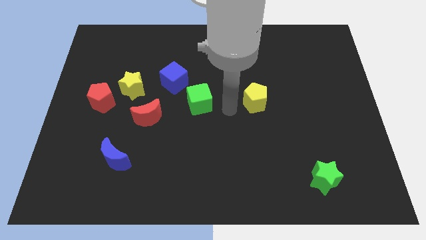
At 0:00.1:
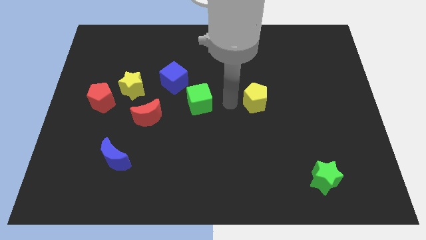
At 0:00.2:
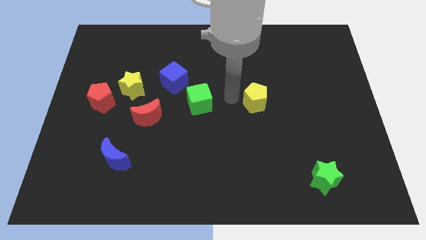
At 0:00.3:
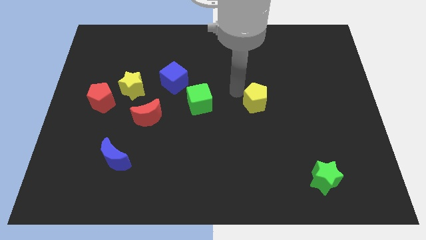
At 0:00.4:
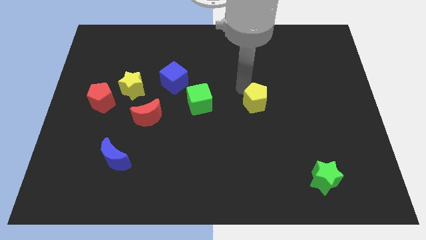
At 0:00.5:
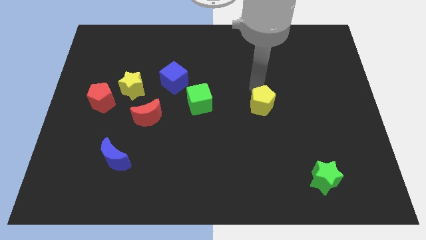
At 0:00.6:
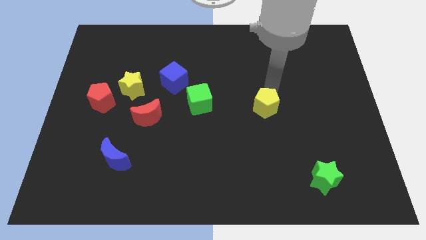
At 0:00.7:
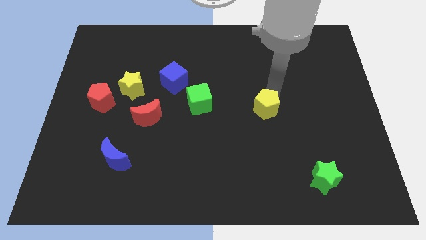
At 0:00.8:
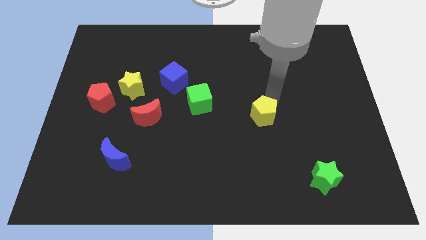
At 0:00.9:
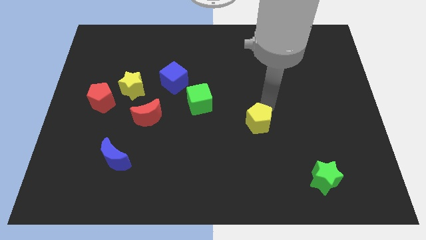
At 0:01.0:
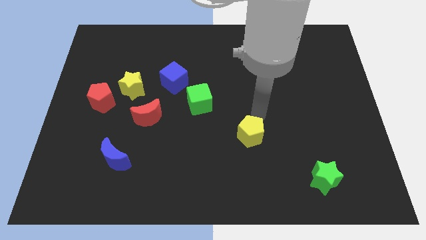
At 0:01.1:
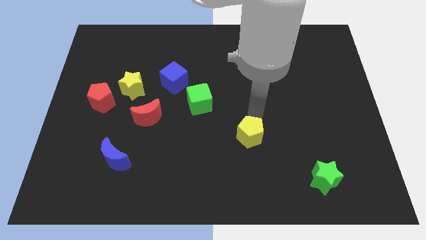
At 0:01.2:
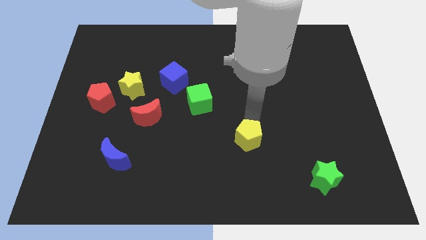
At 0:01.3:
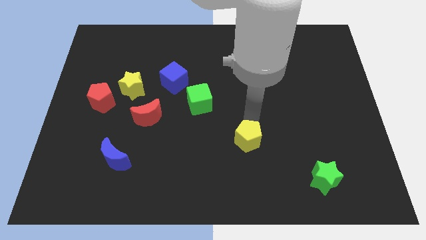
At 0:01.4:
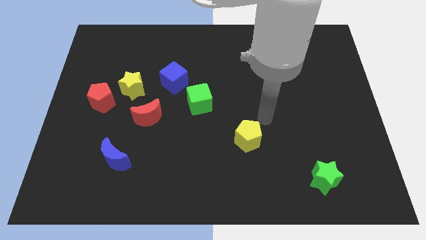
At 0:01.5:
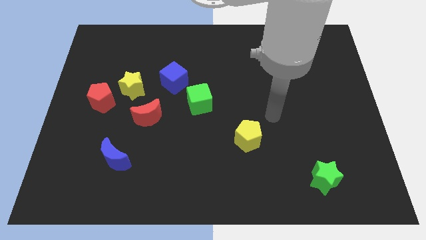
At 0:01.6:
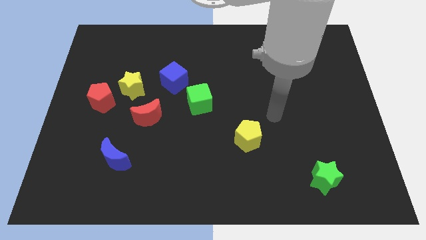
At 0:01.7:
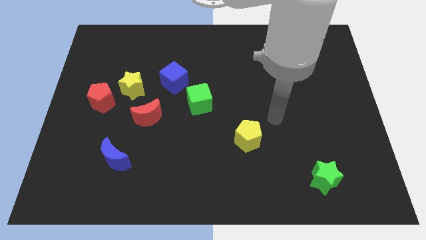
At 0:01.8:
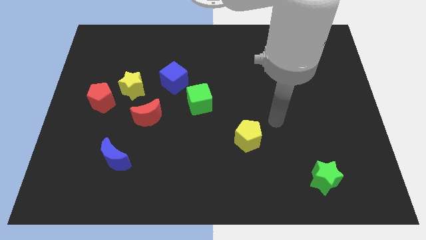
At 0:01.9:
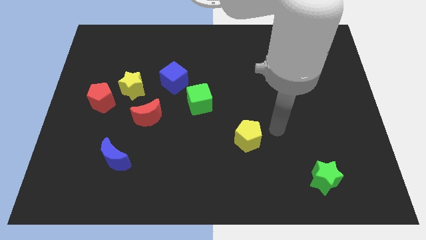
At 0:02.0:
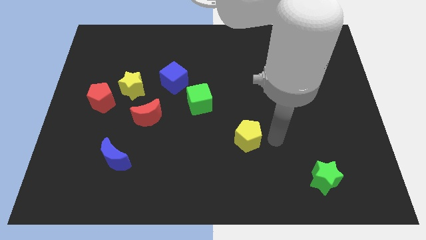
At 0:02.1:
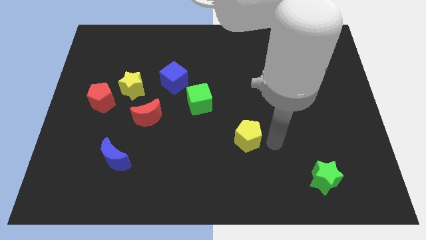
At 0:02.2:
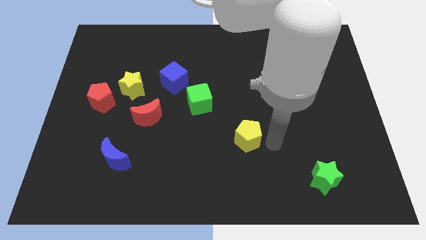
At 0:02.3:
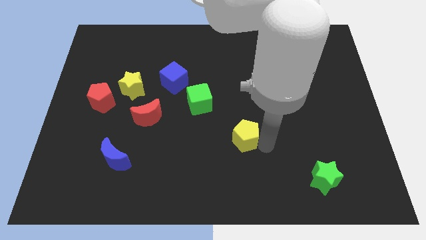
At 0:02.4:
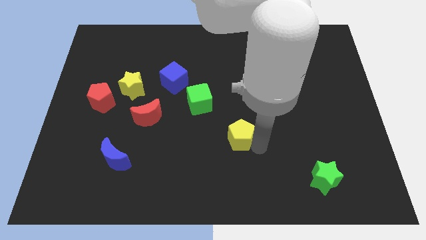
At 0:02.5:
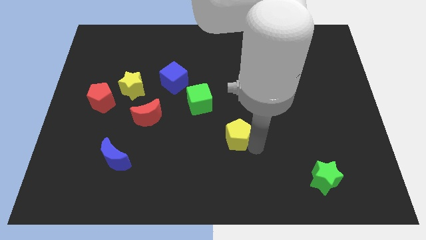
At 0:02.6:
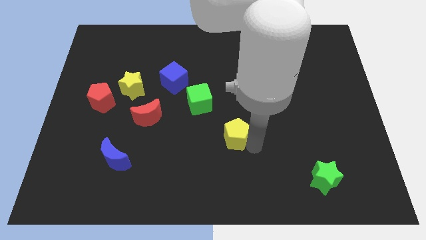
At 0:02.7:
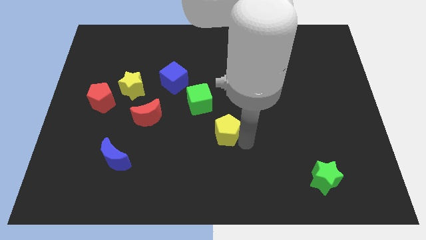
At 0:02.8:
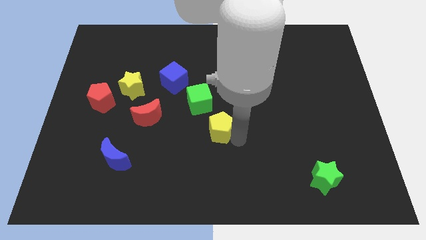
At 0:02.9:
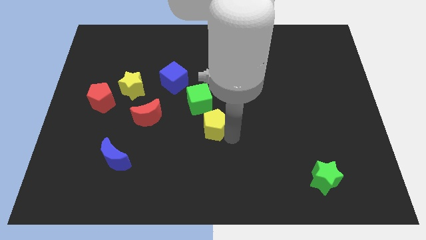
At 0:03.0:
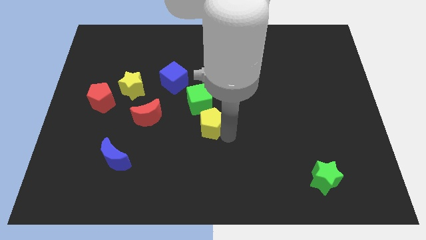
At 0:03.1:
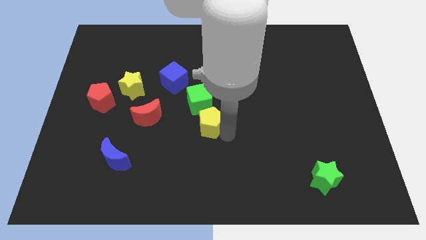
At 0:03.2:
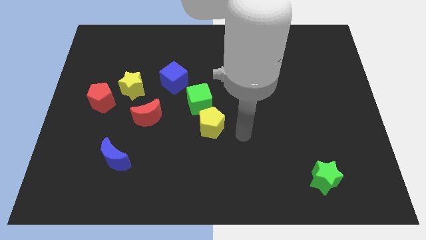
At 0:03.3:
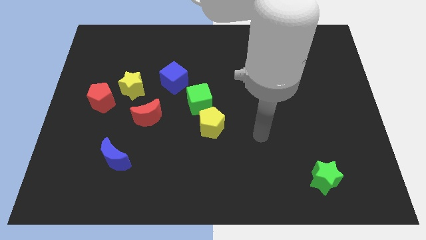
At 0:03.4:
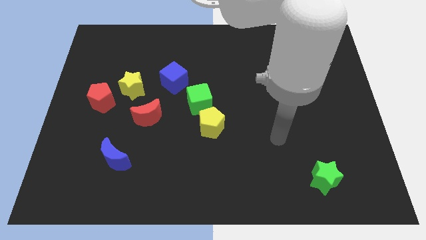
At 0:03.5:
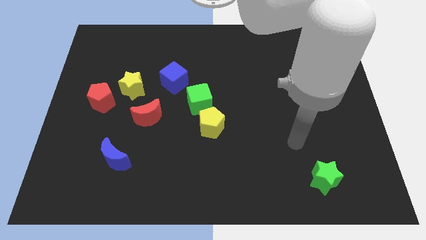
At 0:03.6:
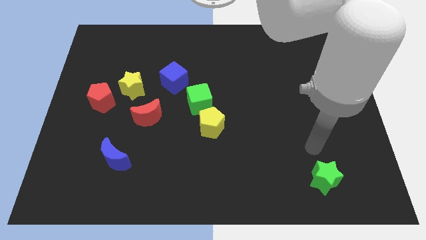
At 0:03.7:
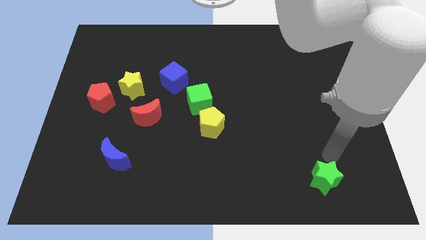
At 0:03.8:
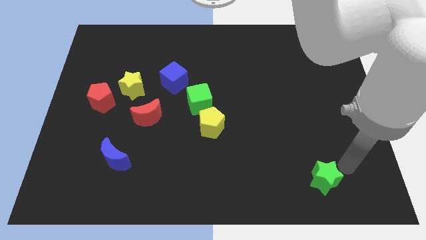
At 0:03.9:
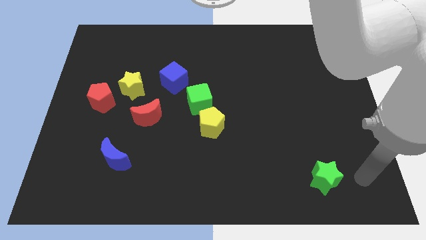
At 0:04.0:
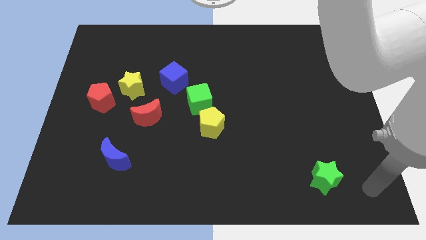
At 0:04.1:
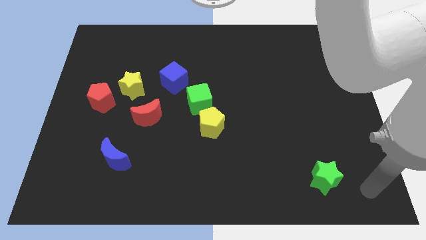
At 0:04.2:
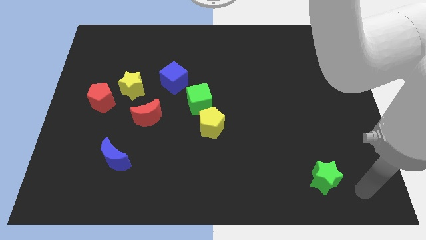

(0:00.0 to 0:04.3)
place yellow pentagon below the green cube

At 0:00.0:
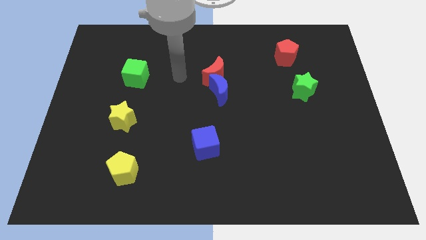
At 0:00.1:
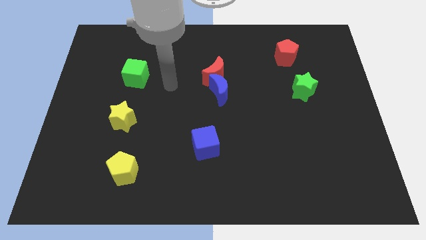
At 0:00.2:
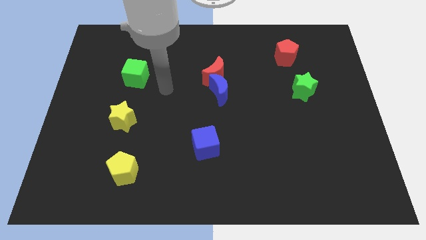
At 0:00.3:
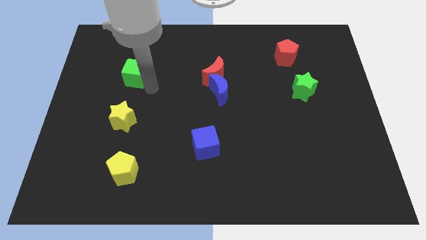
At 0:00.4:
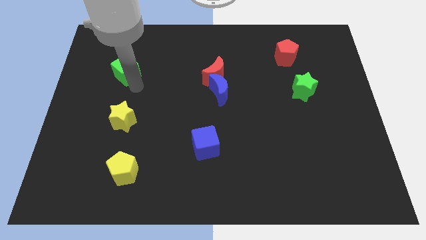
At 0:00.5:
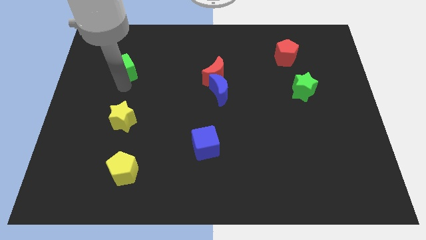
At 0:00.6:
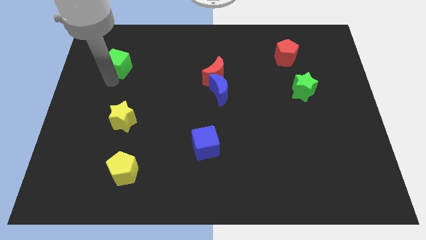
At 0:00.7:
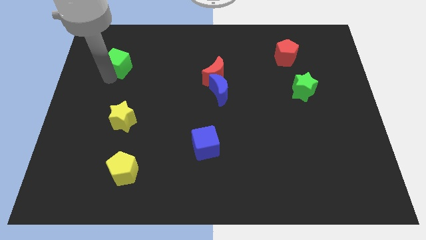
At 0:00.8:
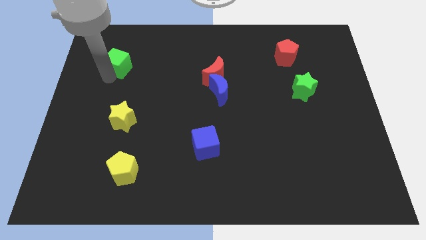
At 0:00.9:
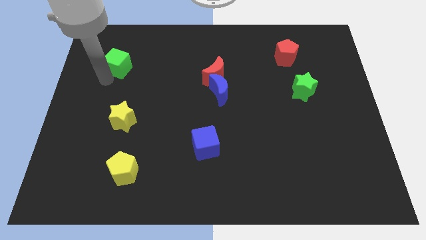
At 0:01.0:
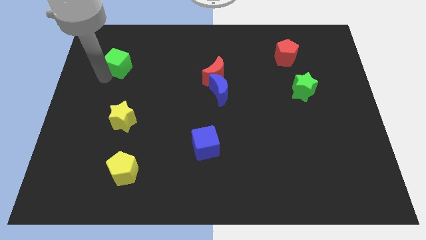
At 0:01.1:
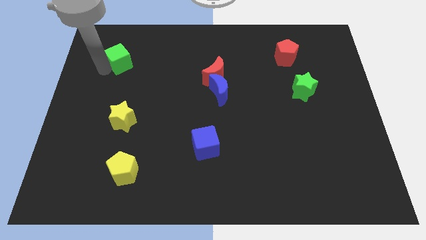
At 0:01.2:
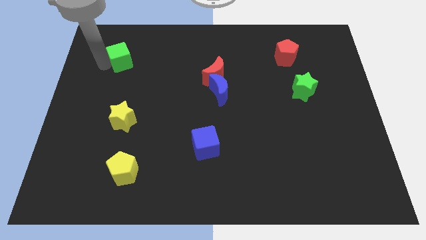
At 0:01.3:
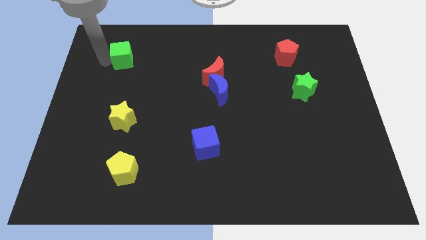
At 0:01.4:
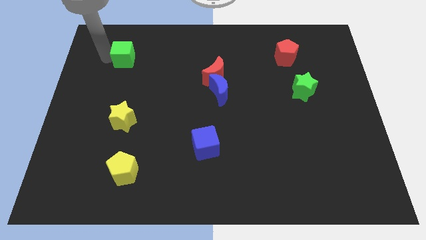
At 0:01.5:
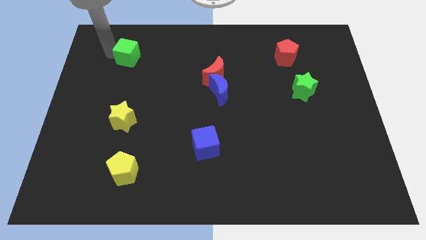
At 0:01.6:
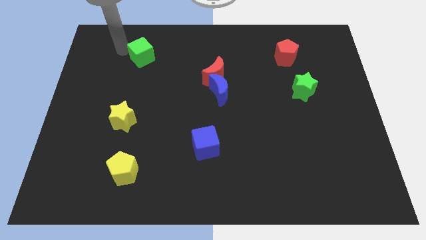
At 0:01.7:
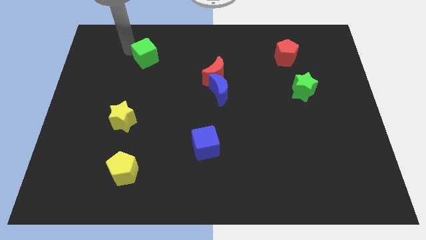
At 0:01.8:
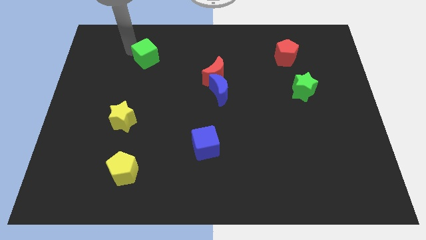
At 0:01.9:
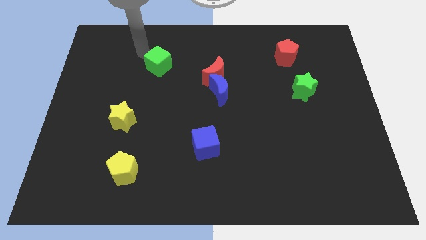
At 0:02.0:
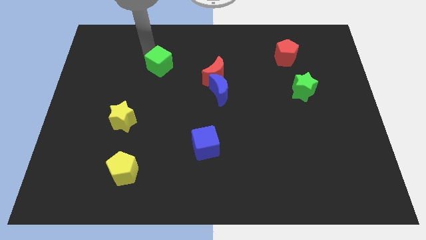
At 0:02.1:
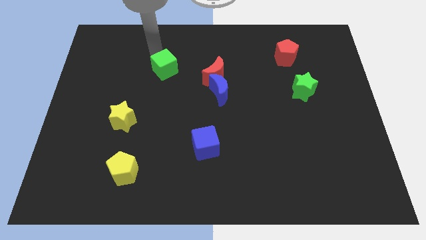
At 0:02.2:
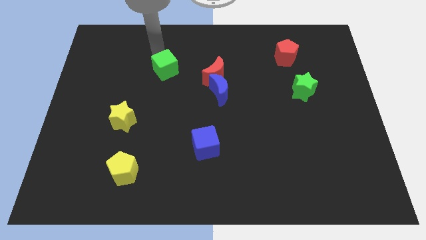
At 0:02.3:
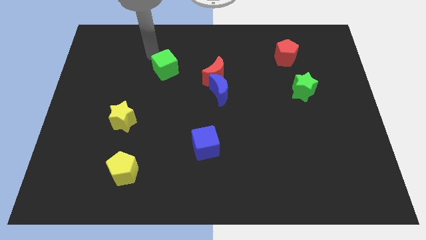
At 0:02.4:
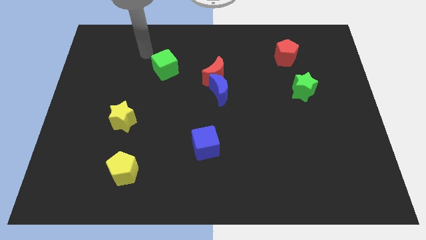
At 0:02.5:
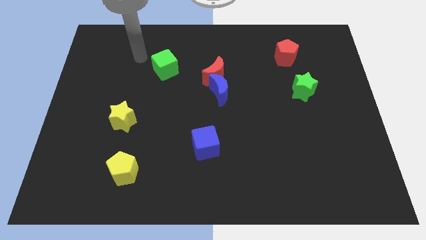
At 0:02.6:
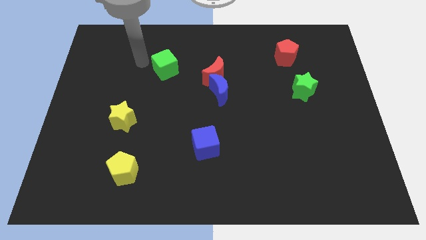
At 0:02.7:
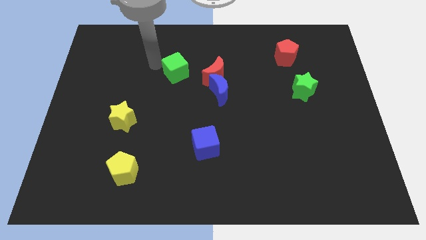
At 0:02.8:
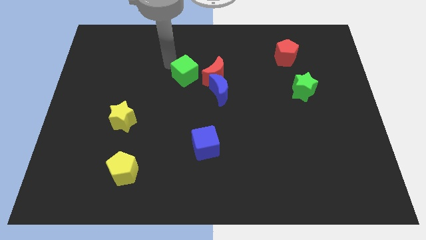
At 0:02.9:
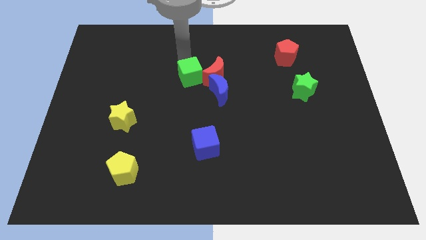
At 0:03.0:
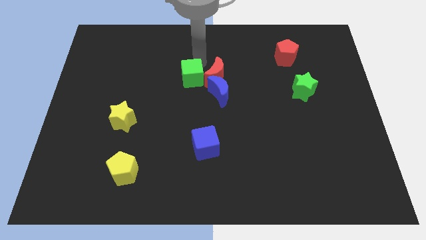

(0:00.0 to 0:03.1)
place the green cube to the left of the red moon

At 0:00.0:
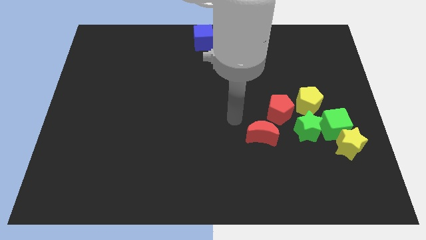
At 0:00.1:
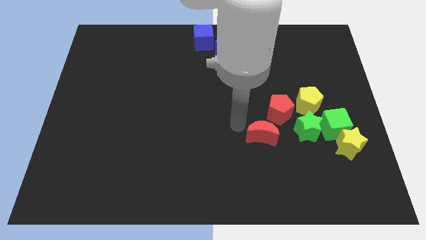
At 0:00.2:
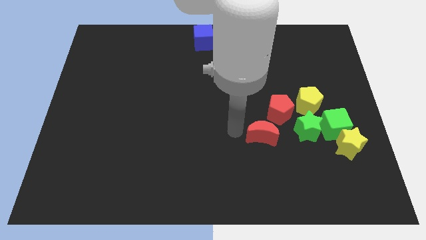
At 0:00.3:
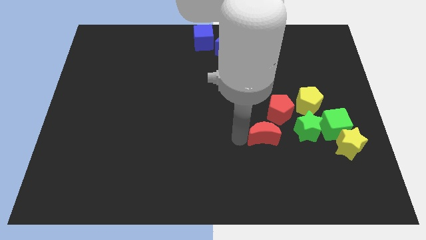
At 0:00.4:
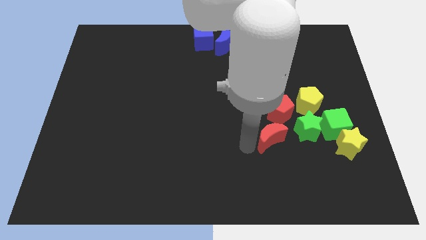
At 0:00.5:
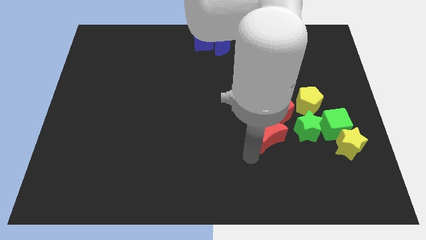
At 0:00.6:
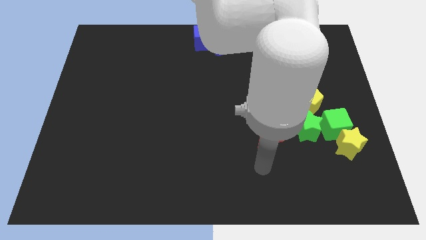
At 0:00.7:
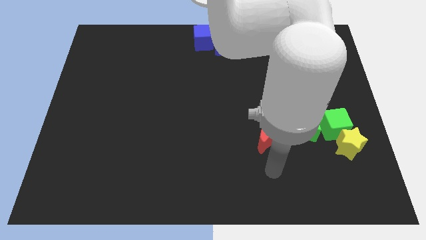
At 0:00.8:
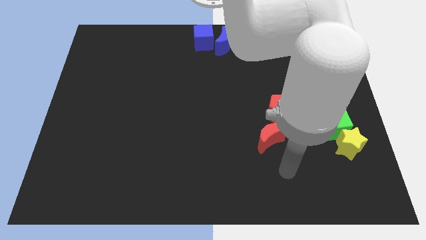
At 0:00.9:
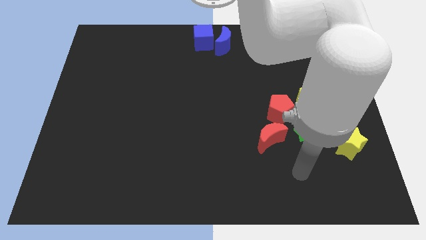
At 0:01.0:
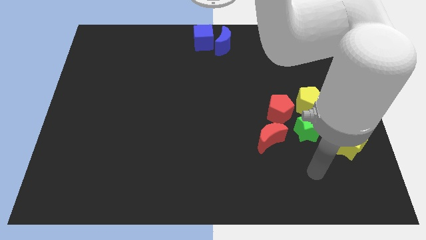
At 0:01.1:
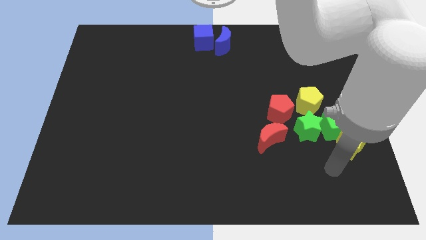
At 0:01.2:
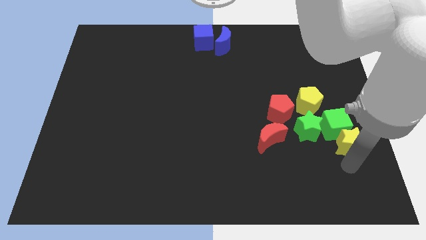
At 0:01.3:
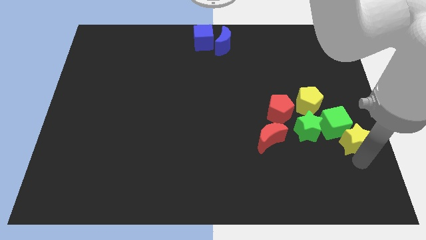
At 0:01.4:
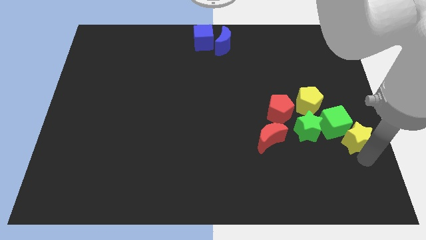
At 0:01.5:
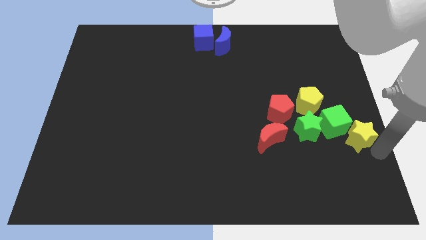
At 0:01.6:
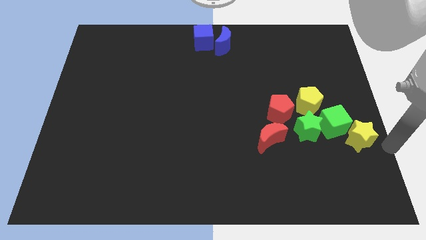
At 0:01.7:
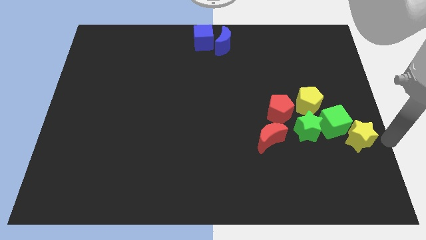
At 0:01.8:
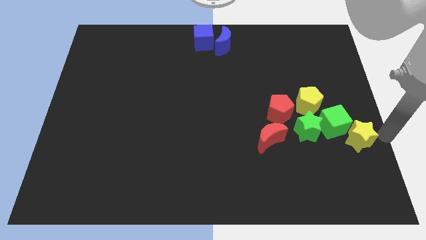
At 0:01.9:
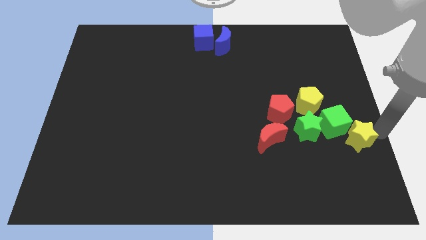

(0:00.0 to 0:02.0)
slightly push the red moon and yellow star
